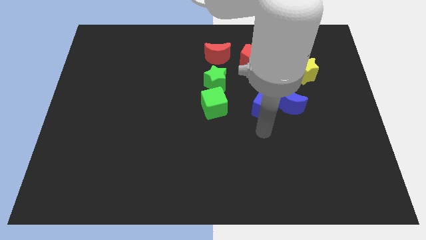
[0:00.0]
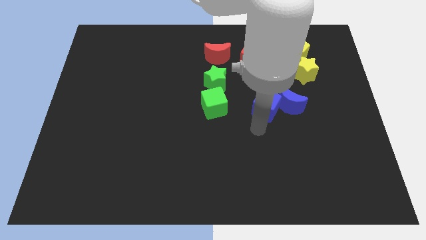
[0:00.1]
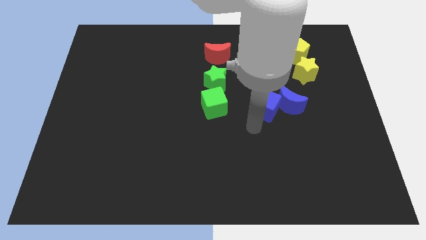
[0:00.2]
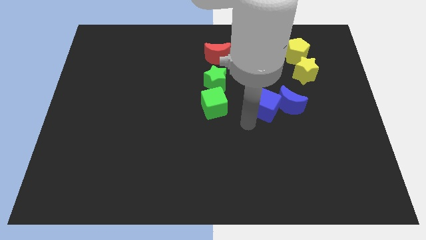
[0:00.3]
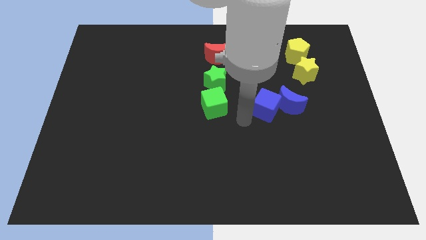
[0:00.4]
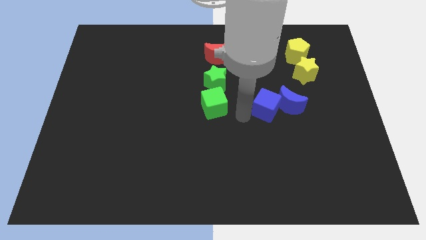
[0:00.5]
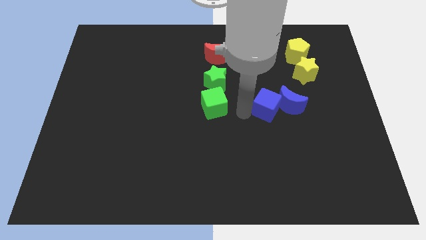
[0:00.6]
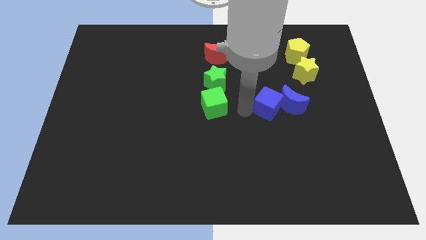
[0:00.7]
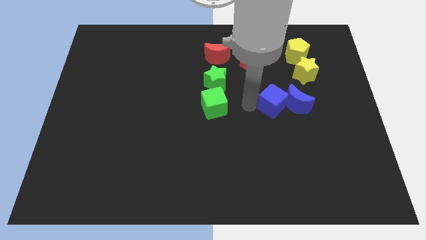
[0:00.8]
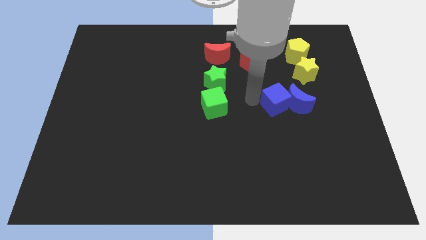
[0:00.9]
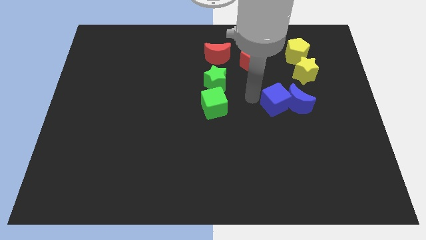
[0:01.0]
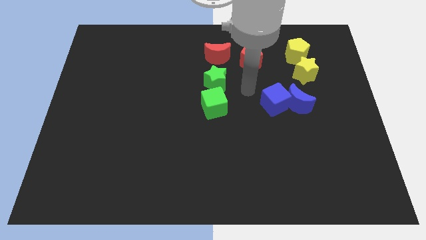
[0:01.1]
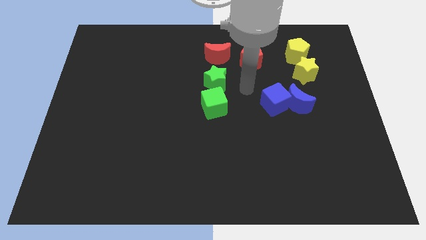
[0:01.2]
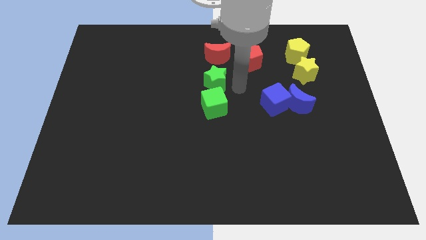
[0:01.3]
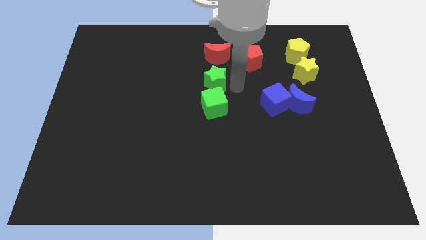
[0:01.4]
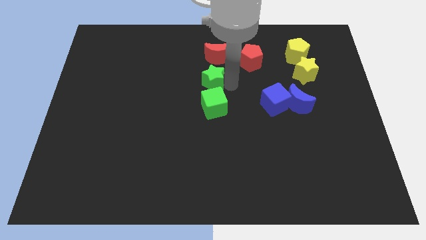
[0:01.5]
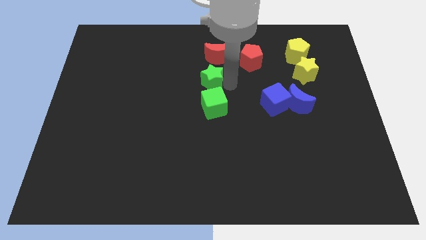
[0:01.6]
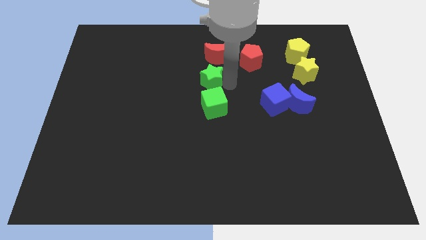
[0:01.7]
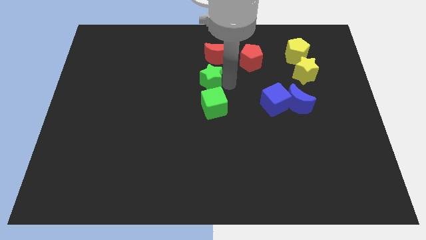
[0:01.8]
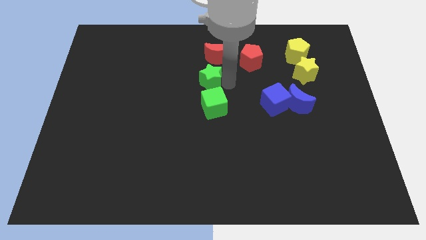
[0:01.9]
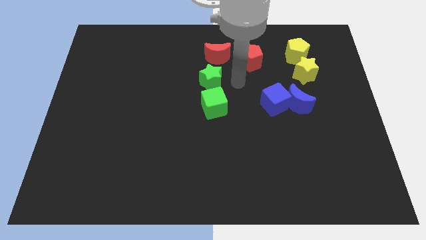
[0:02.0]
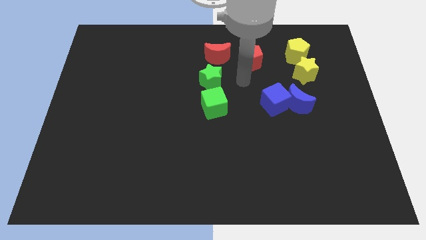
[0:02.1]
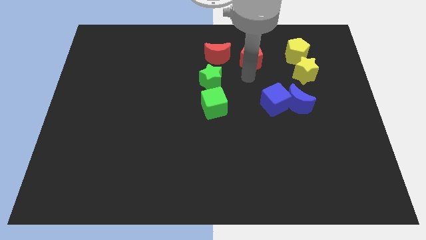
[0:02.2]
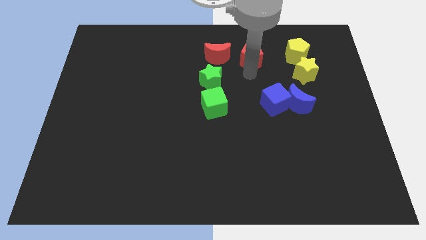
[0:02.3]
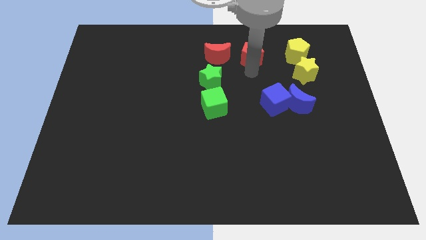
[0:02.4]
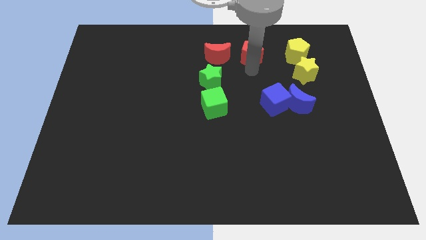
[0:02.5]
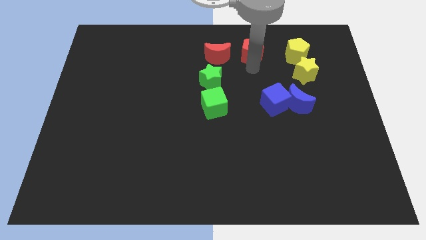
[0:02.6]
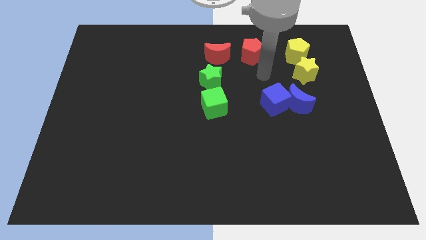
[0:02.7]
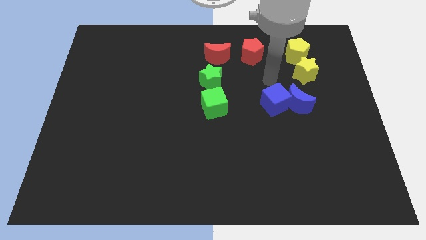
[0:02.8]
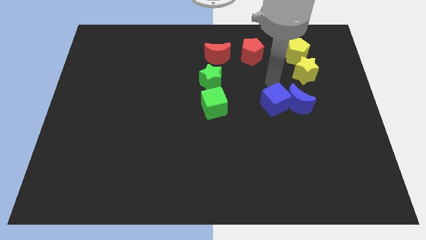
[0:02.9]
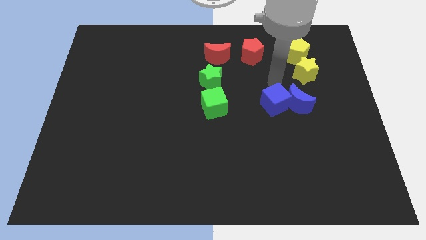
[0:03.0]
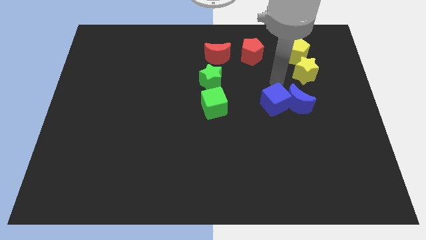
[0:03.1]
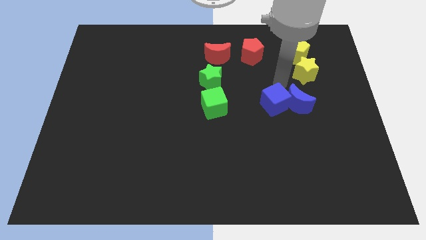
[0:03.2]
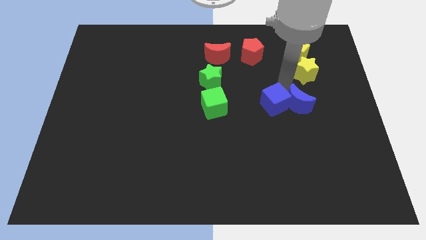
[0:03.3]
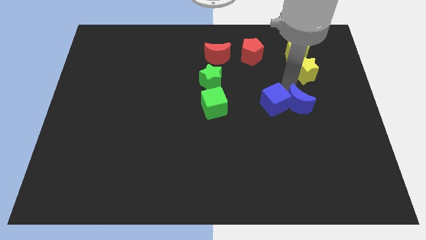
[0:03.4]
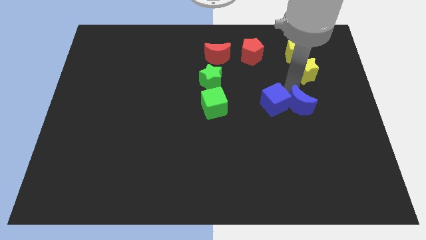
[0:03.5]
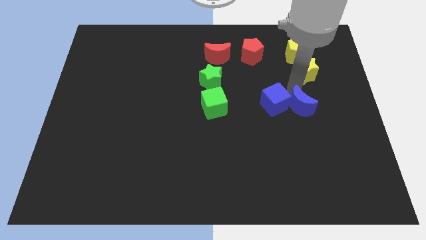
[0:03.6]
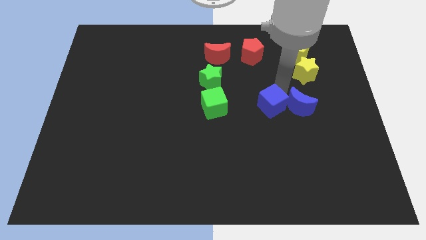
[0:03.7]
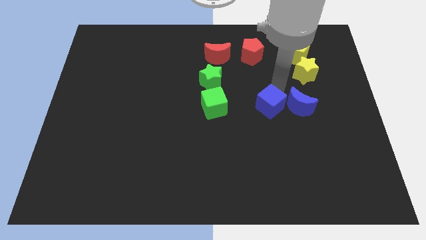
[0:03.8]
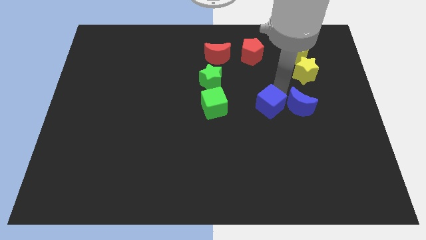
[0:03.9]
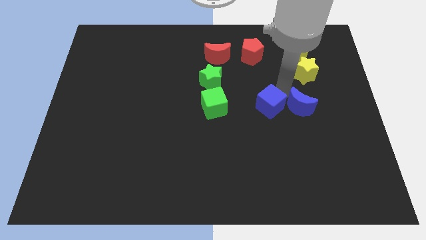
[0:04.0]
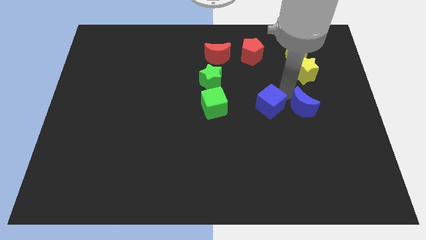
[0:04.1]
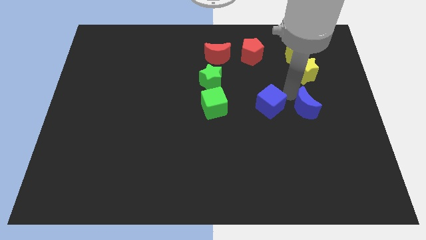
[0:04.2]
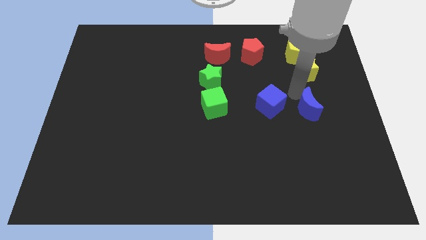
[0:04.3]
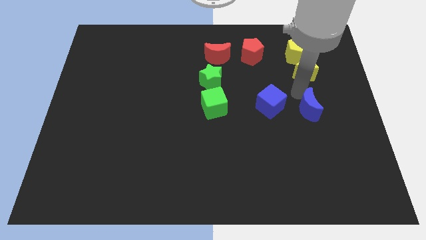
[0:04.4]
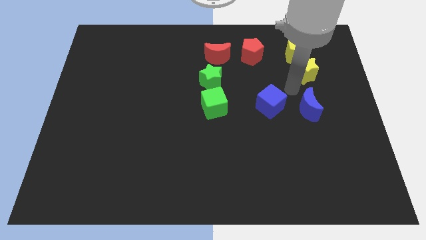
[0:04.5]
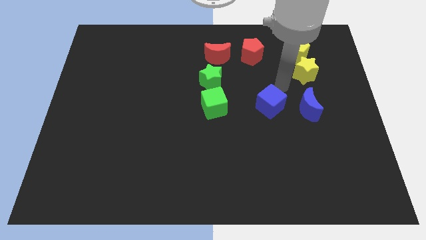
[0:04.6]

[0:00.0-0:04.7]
separate the blue blocks

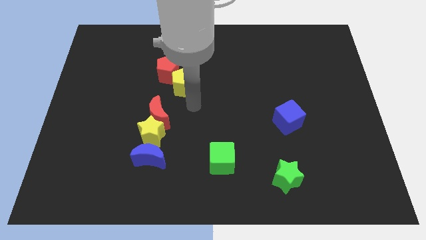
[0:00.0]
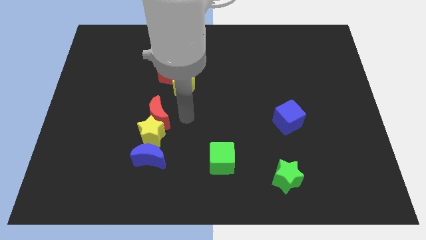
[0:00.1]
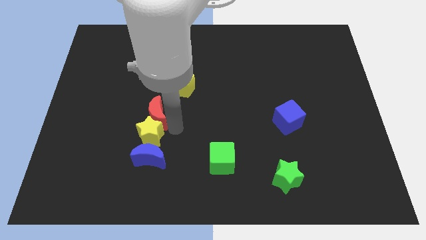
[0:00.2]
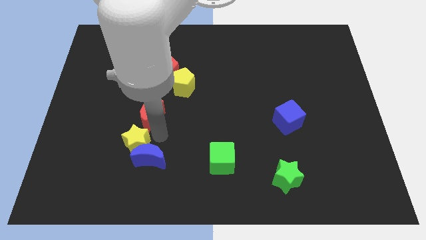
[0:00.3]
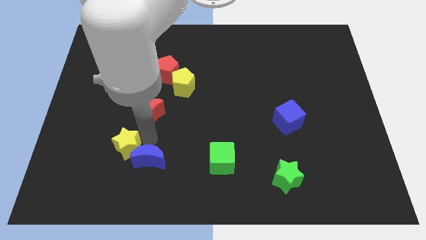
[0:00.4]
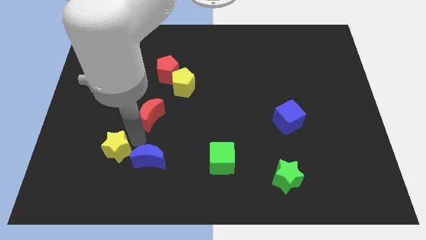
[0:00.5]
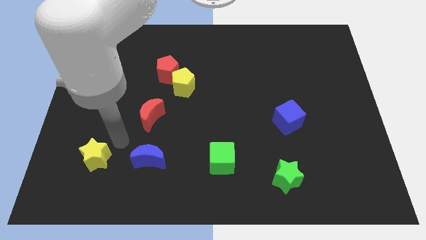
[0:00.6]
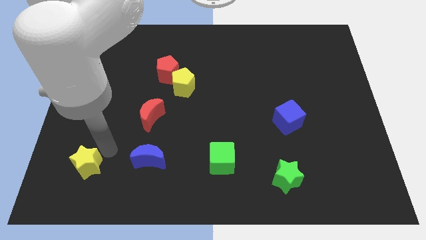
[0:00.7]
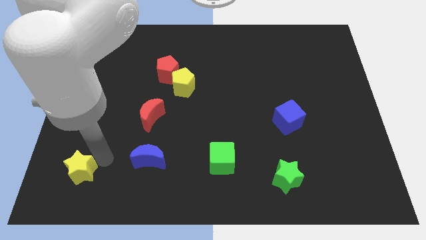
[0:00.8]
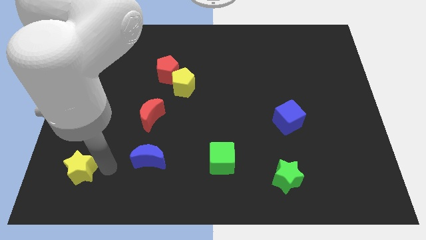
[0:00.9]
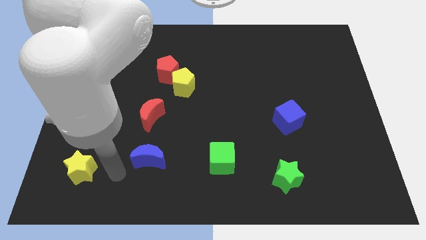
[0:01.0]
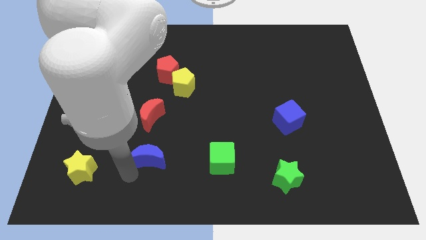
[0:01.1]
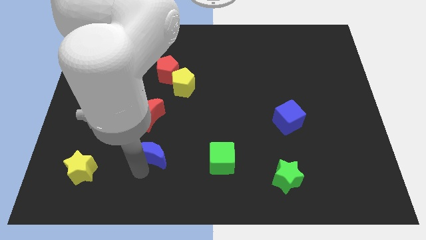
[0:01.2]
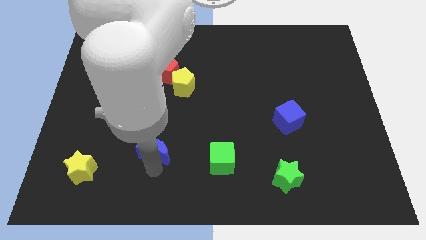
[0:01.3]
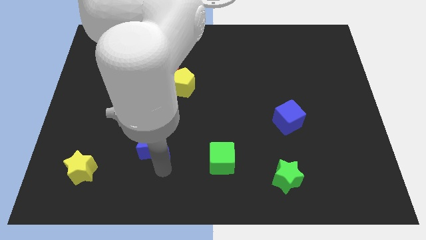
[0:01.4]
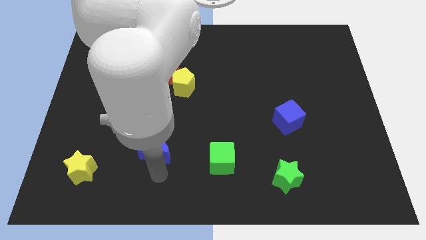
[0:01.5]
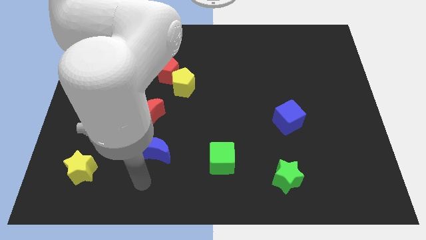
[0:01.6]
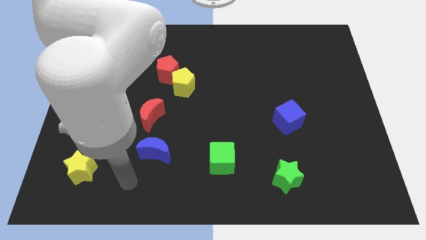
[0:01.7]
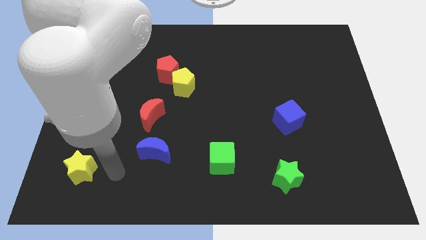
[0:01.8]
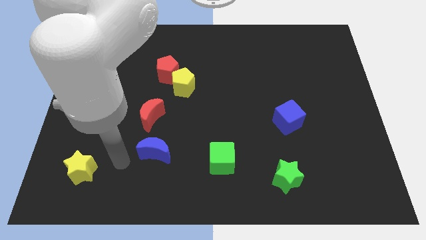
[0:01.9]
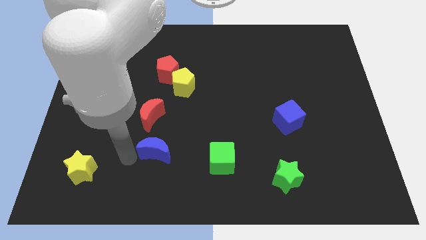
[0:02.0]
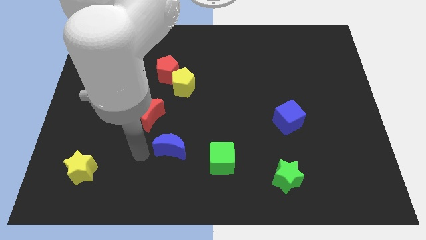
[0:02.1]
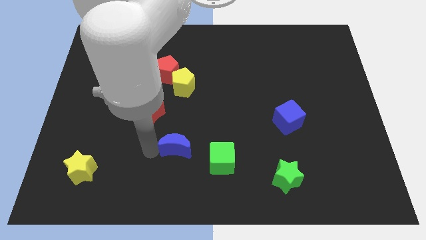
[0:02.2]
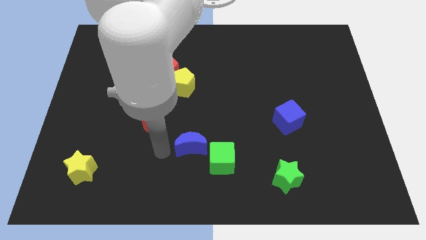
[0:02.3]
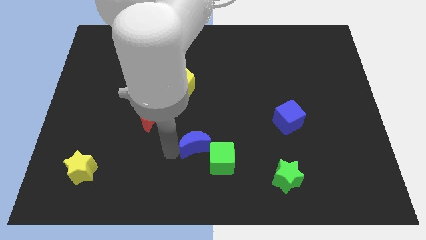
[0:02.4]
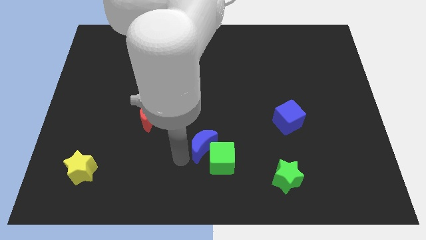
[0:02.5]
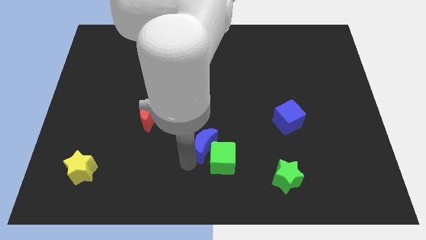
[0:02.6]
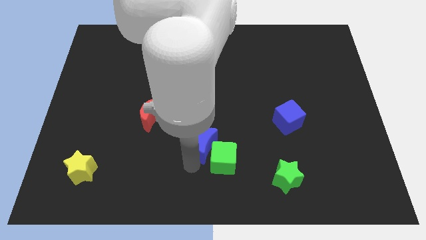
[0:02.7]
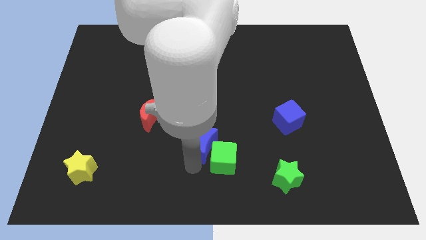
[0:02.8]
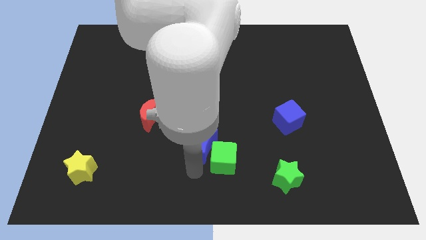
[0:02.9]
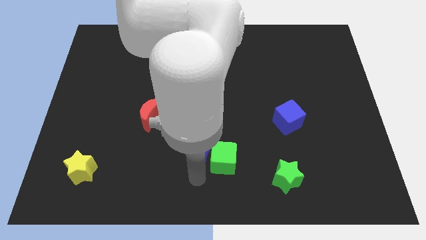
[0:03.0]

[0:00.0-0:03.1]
push blue crescent to the left of the green cube

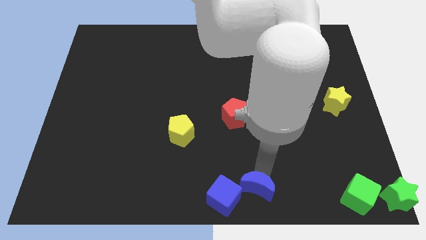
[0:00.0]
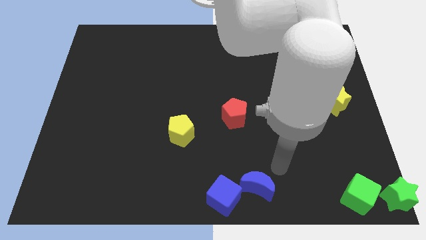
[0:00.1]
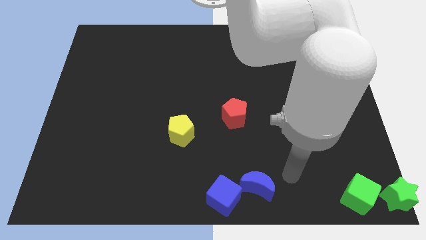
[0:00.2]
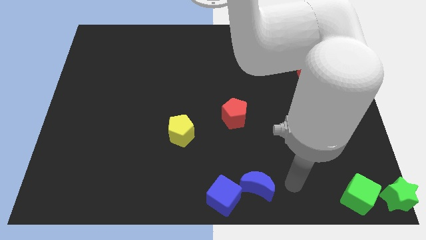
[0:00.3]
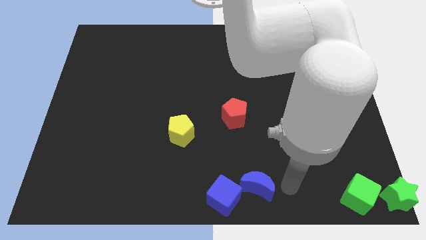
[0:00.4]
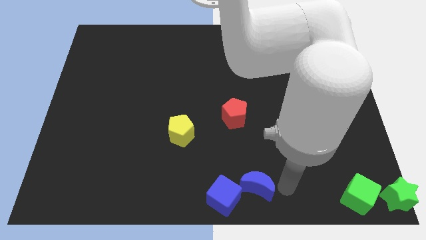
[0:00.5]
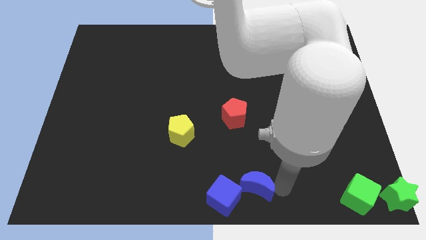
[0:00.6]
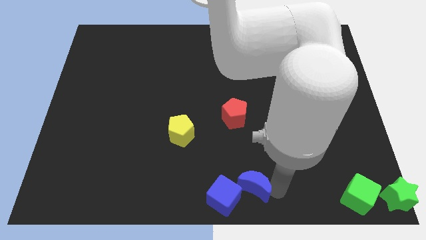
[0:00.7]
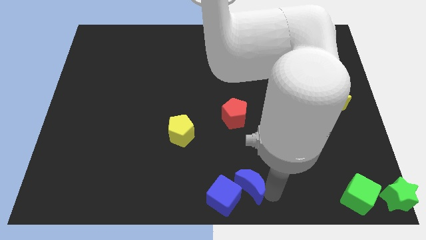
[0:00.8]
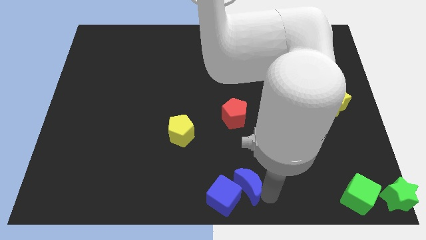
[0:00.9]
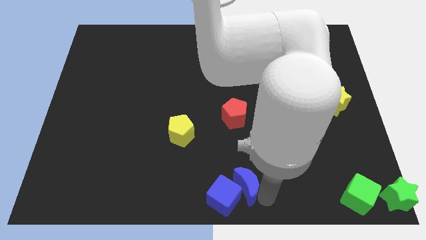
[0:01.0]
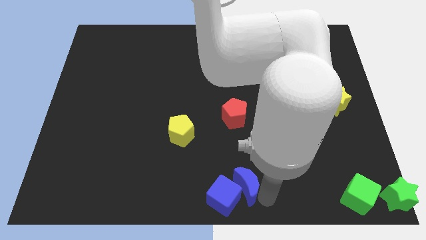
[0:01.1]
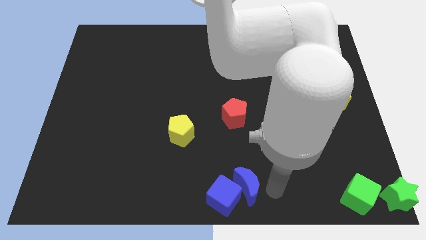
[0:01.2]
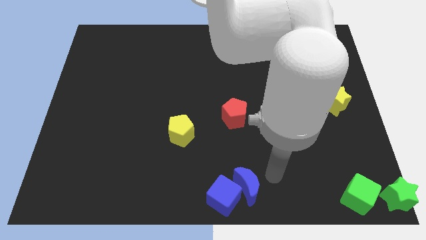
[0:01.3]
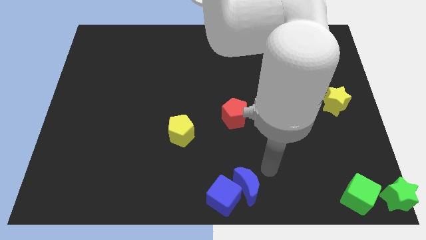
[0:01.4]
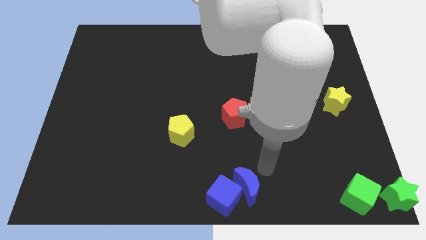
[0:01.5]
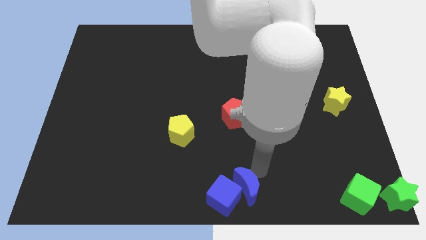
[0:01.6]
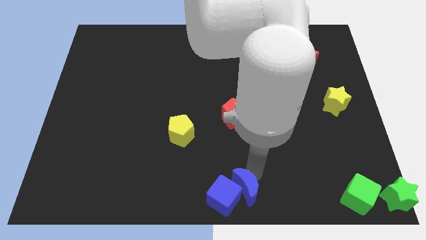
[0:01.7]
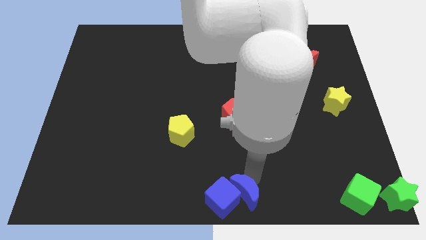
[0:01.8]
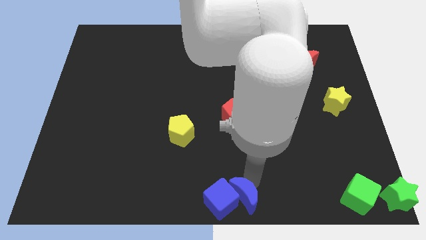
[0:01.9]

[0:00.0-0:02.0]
push the blue crescent into blue cube
